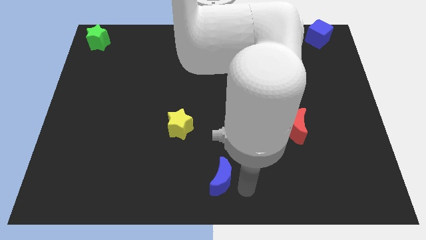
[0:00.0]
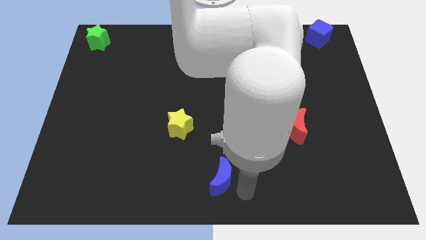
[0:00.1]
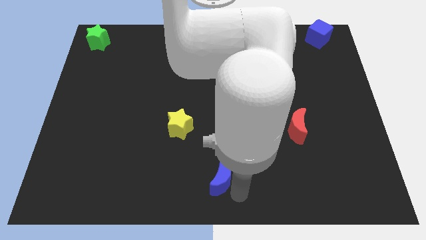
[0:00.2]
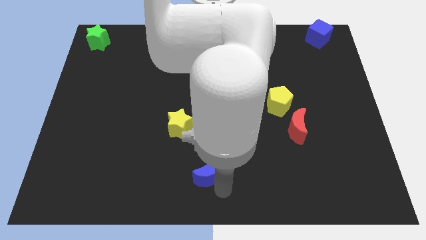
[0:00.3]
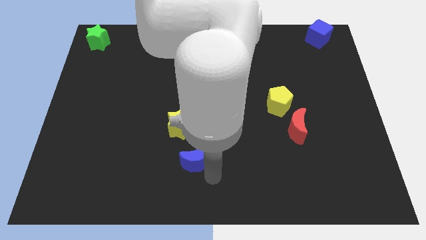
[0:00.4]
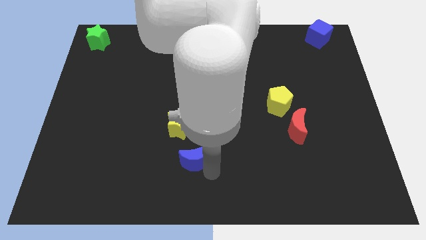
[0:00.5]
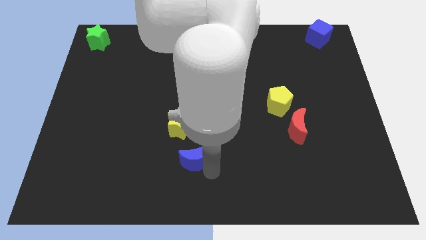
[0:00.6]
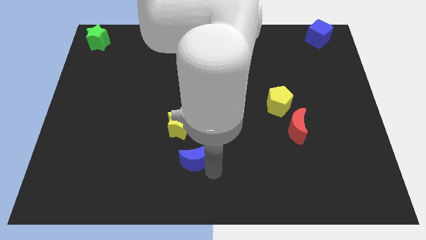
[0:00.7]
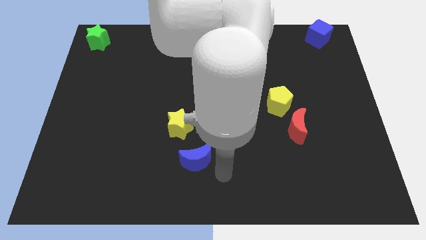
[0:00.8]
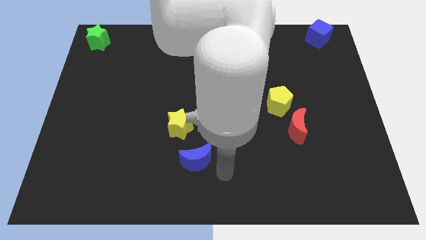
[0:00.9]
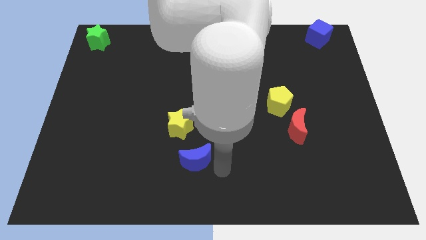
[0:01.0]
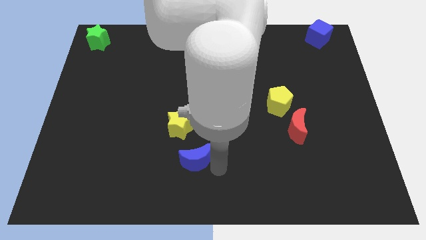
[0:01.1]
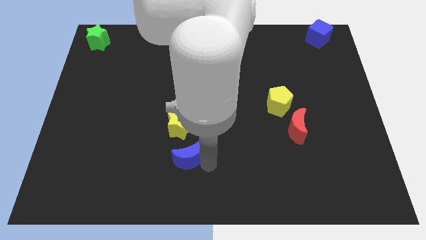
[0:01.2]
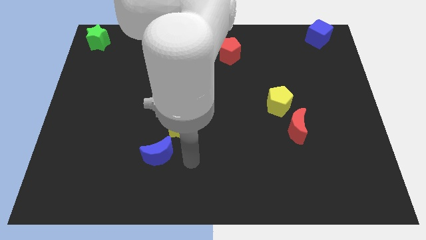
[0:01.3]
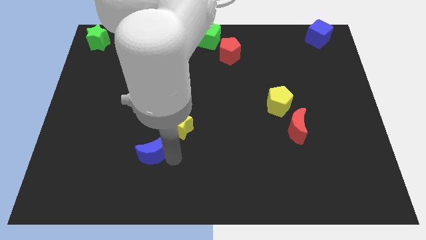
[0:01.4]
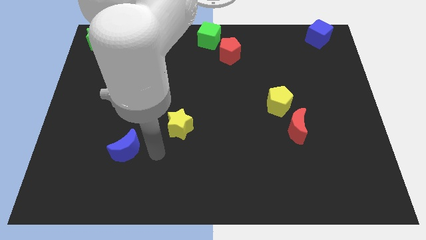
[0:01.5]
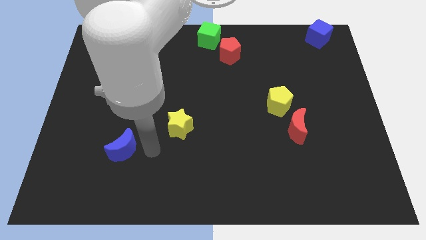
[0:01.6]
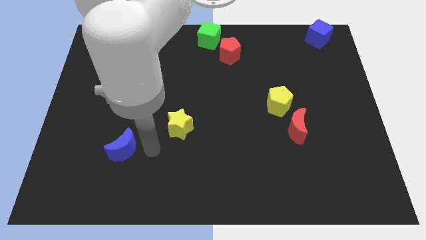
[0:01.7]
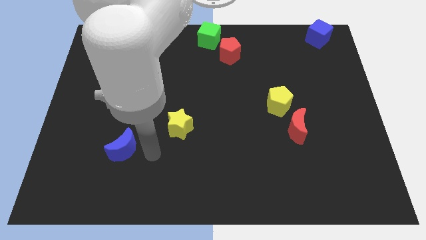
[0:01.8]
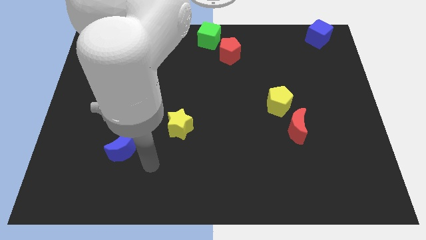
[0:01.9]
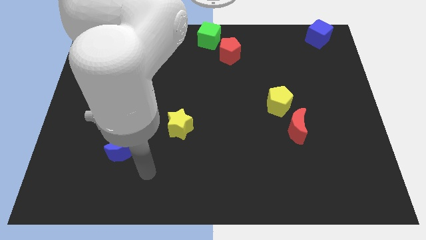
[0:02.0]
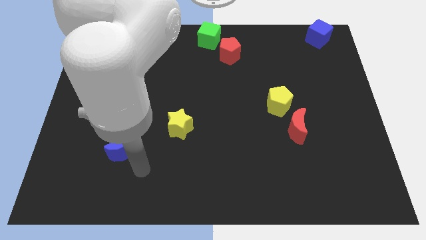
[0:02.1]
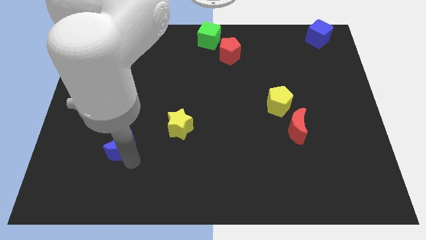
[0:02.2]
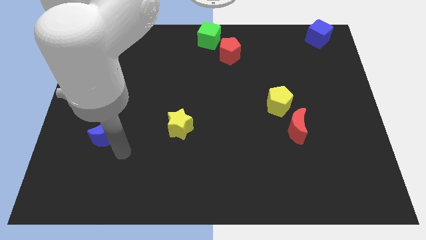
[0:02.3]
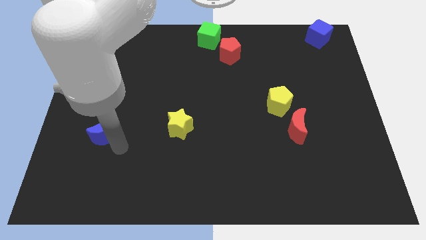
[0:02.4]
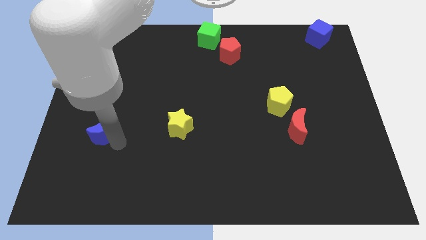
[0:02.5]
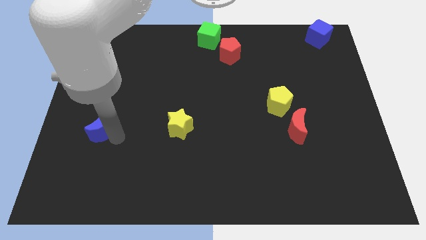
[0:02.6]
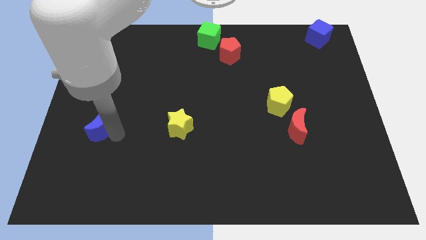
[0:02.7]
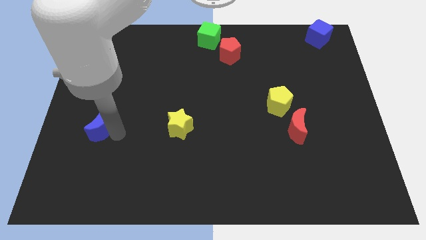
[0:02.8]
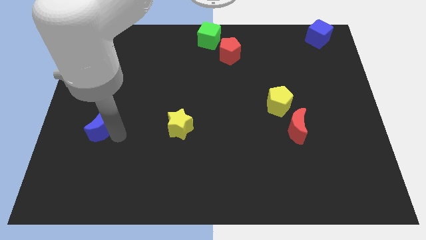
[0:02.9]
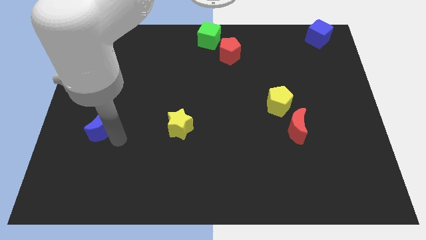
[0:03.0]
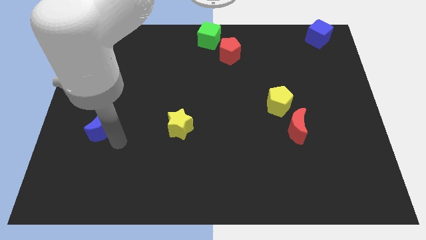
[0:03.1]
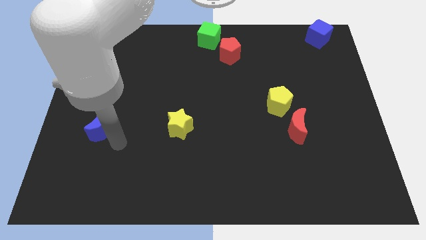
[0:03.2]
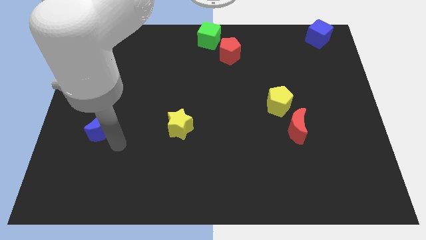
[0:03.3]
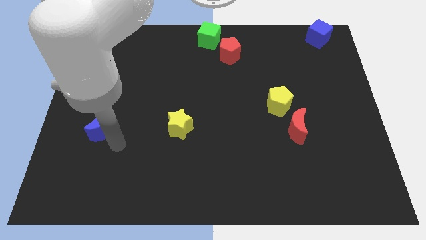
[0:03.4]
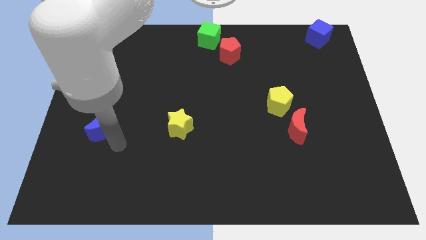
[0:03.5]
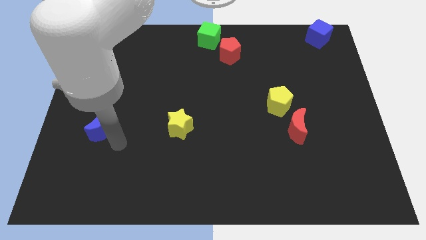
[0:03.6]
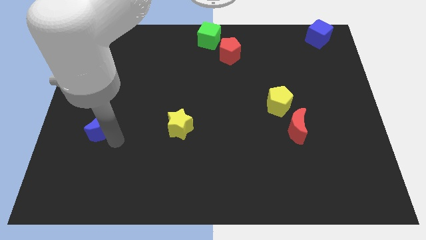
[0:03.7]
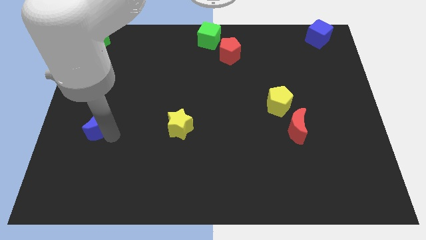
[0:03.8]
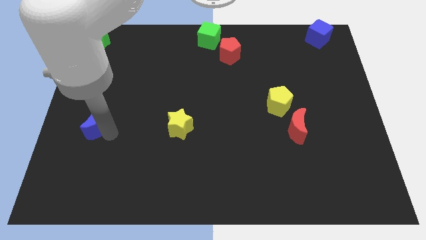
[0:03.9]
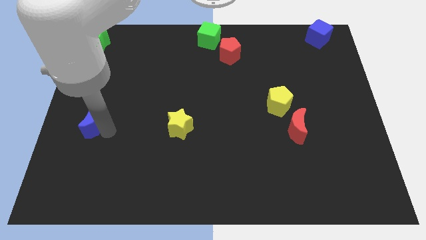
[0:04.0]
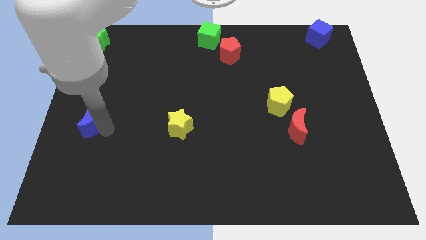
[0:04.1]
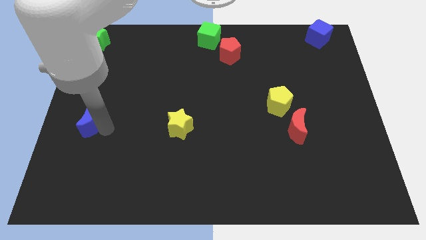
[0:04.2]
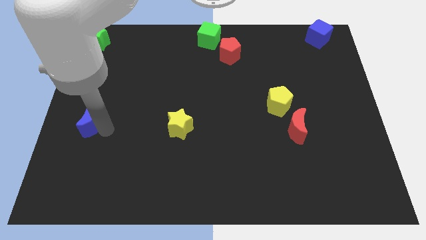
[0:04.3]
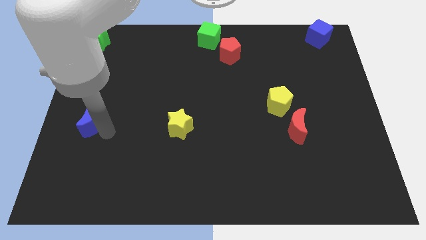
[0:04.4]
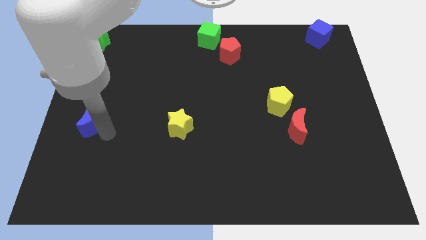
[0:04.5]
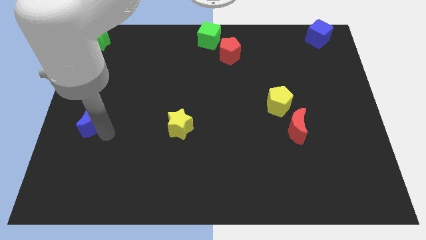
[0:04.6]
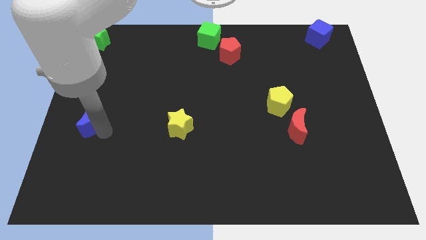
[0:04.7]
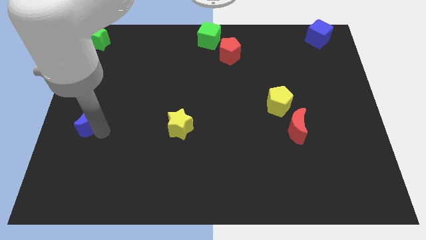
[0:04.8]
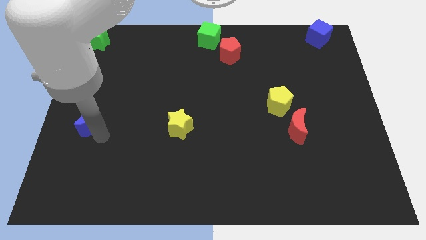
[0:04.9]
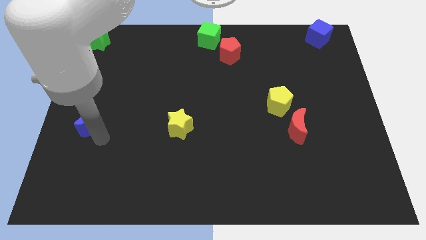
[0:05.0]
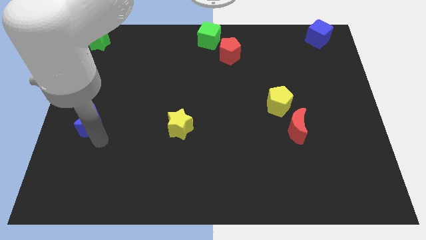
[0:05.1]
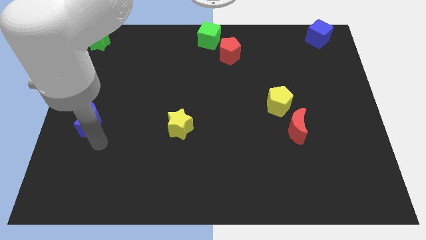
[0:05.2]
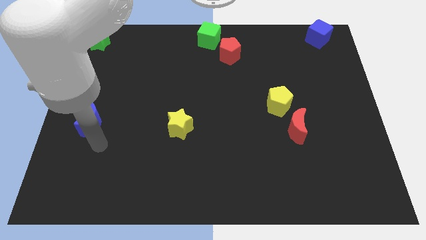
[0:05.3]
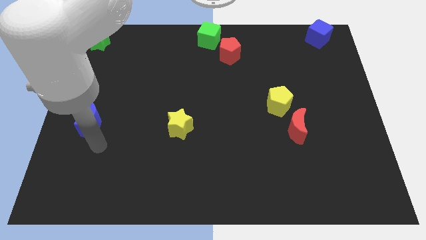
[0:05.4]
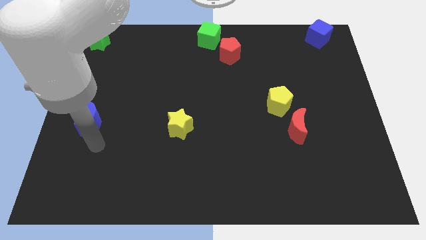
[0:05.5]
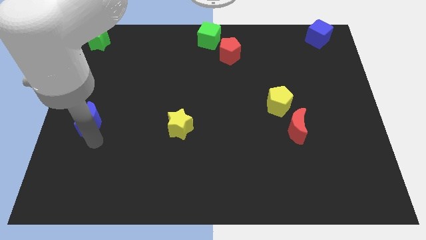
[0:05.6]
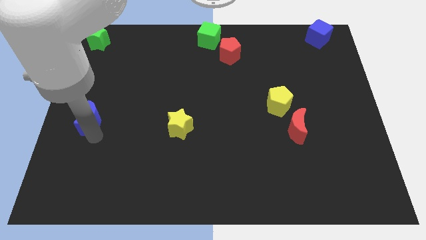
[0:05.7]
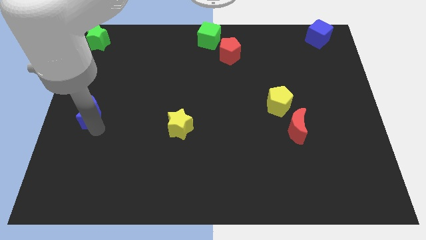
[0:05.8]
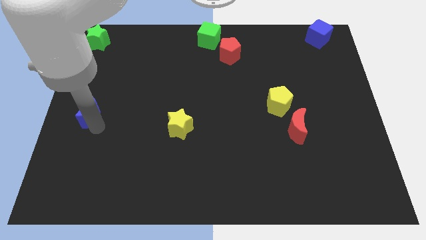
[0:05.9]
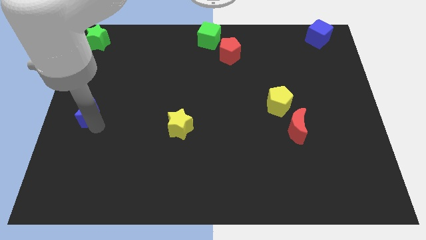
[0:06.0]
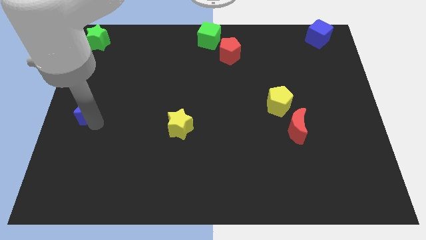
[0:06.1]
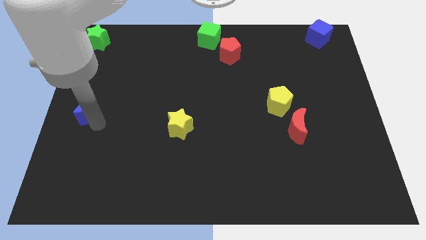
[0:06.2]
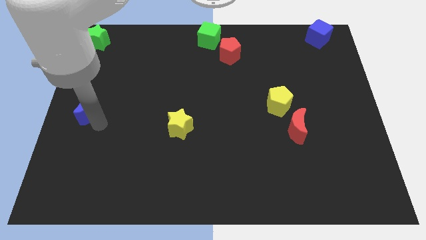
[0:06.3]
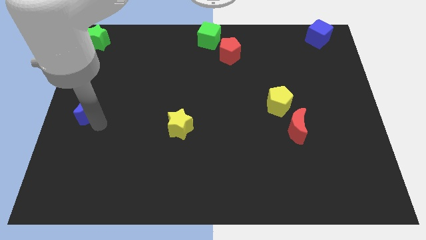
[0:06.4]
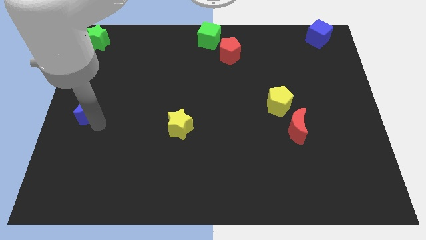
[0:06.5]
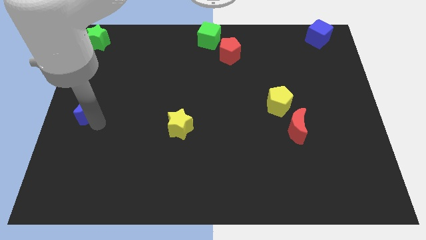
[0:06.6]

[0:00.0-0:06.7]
push the blue crescent to the left center of the board

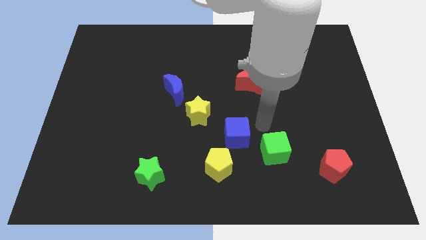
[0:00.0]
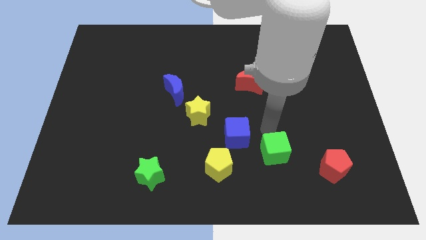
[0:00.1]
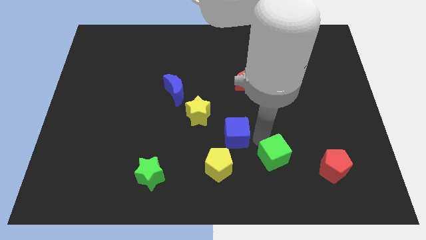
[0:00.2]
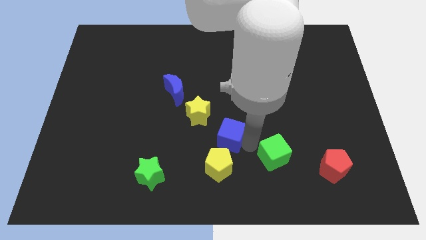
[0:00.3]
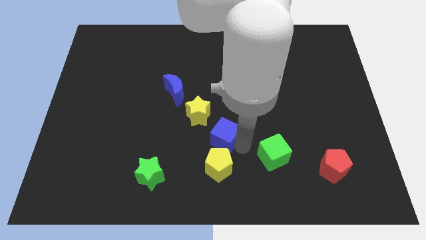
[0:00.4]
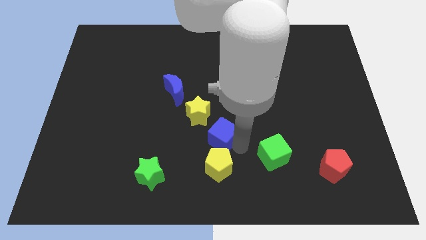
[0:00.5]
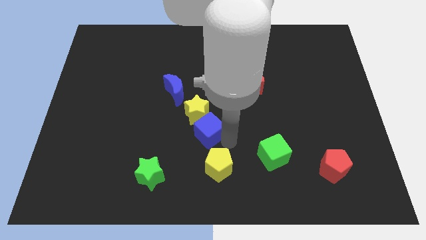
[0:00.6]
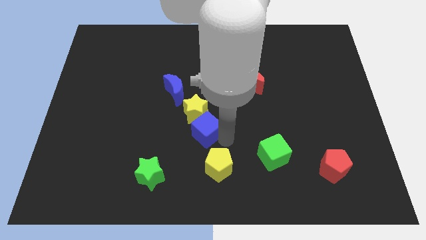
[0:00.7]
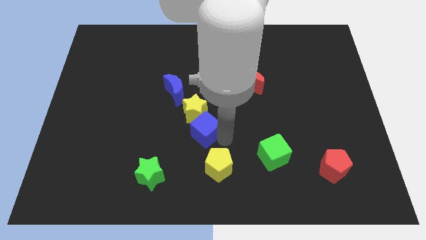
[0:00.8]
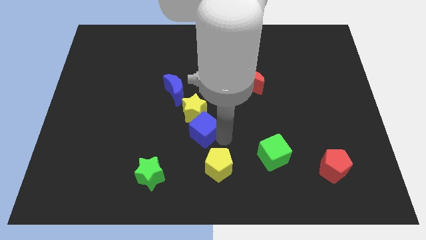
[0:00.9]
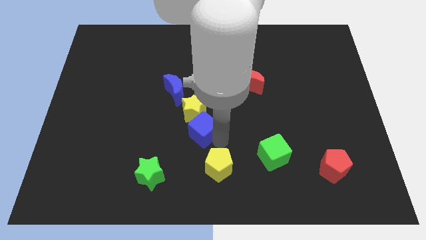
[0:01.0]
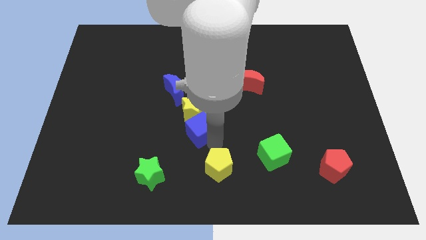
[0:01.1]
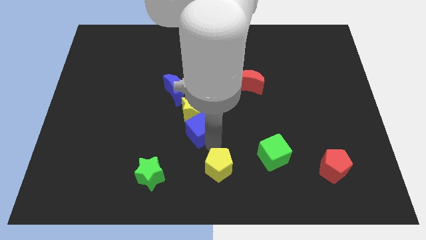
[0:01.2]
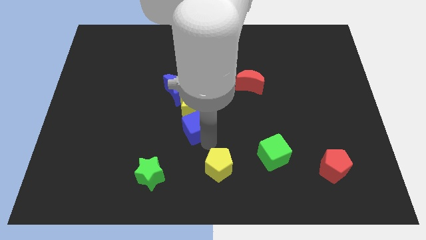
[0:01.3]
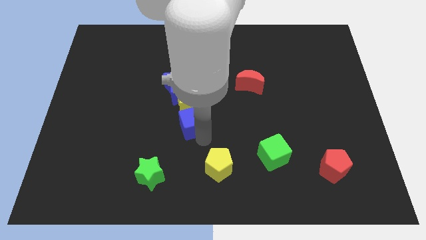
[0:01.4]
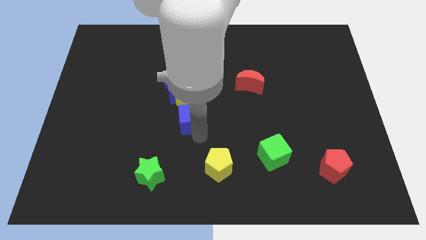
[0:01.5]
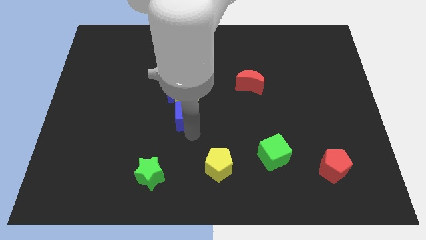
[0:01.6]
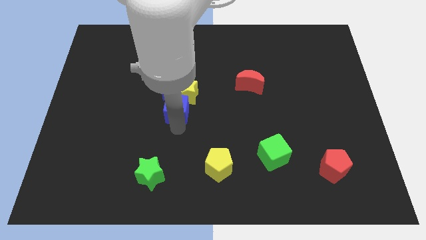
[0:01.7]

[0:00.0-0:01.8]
push the blue cube into the yellow star

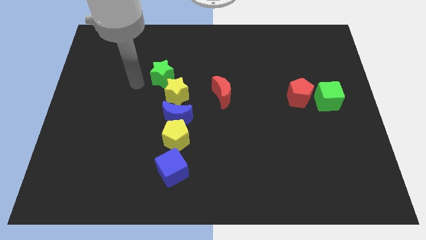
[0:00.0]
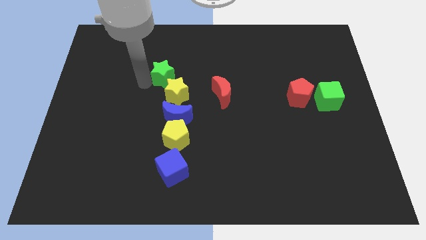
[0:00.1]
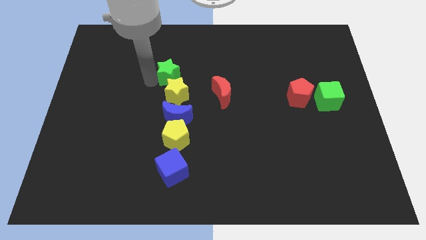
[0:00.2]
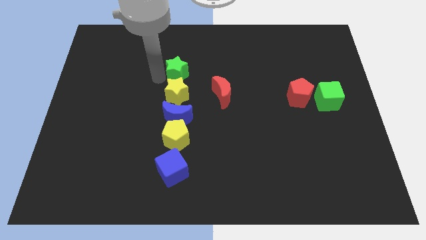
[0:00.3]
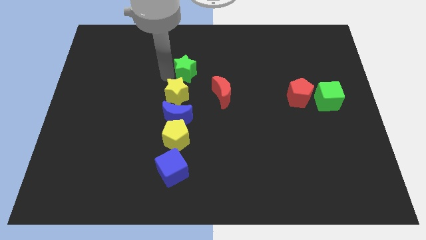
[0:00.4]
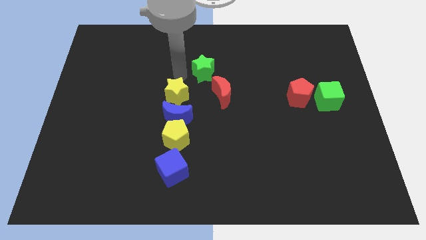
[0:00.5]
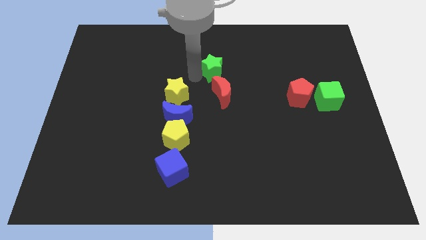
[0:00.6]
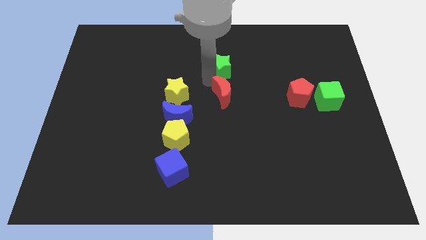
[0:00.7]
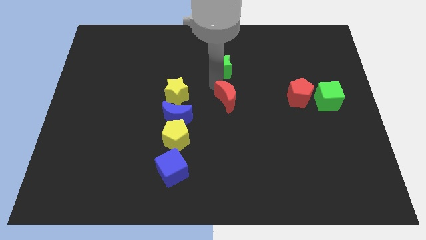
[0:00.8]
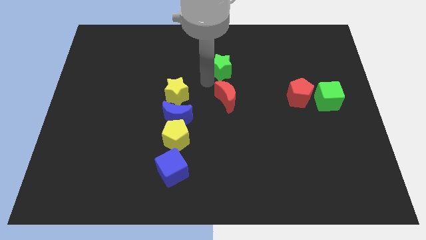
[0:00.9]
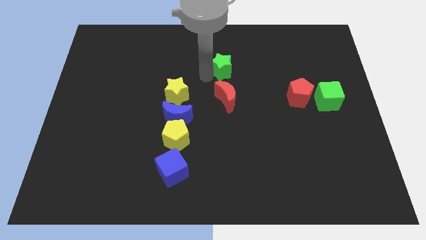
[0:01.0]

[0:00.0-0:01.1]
push green star on the top of red crescent
